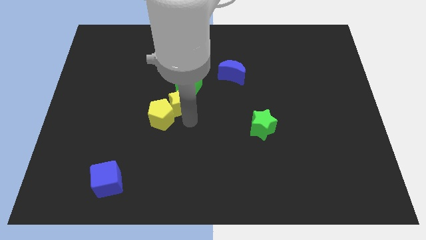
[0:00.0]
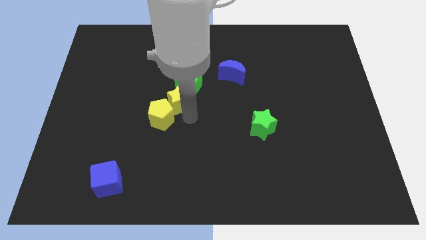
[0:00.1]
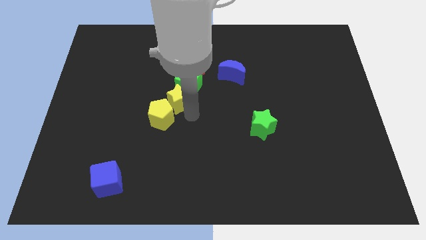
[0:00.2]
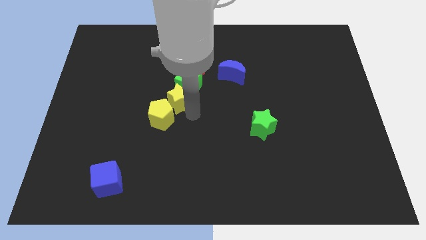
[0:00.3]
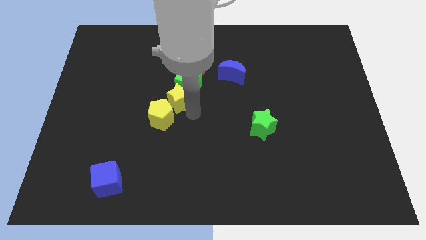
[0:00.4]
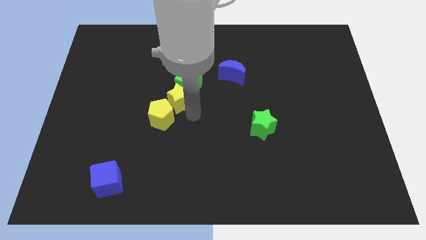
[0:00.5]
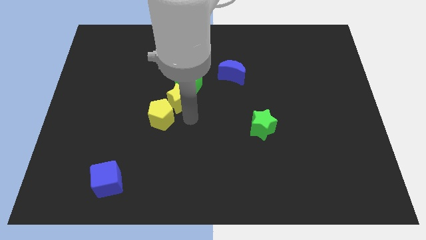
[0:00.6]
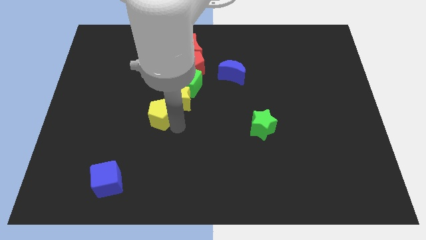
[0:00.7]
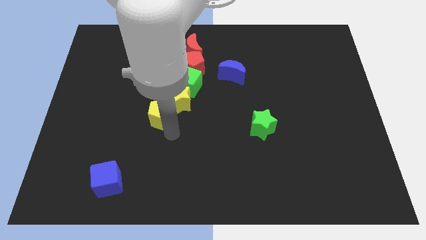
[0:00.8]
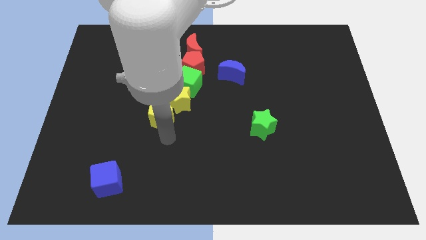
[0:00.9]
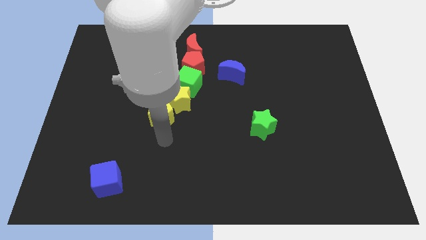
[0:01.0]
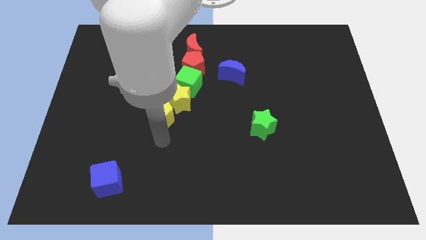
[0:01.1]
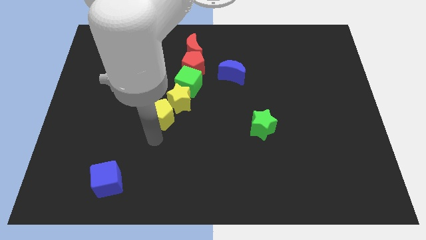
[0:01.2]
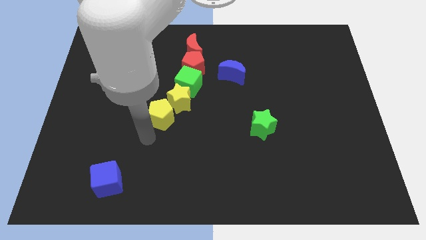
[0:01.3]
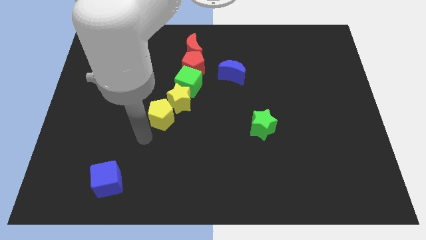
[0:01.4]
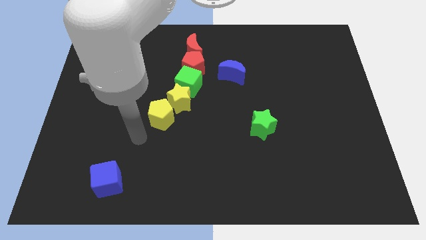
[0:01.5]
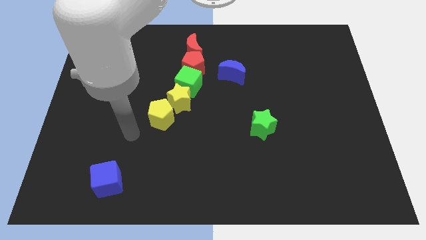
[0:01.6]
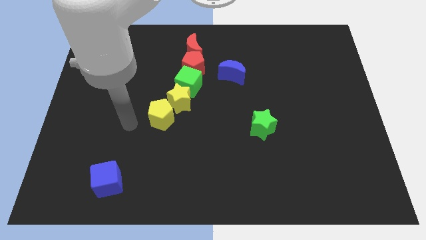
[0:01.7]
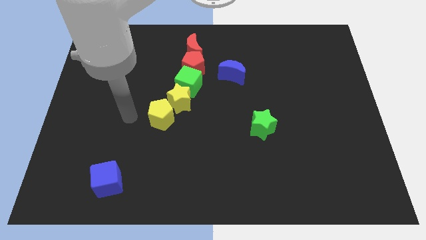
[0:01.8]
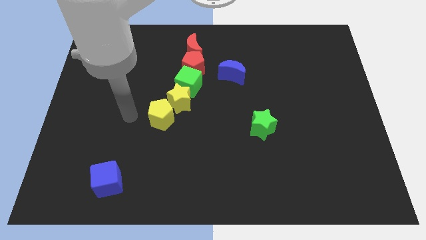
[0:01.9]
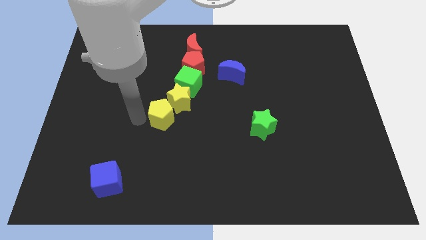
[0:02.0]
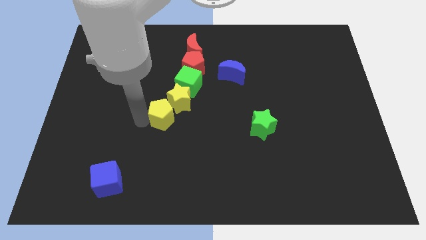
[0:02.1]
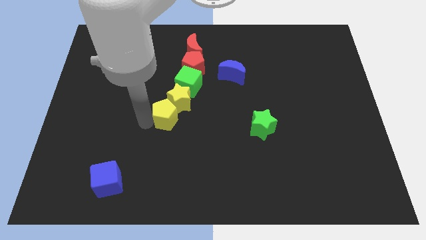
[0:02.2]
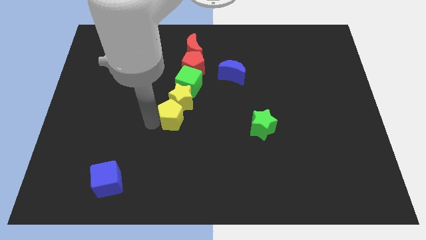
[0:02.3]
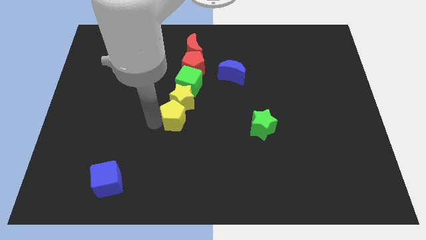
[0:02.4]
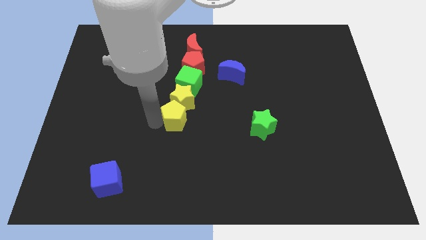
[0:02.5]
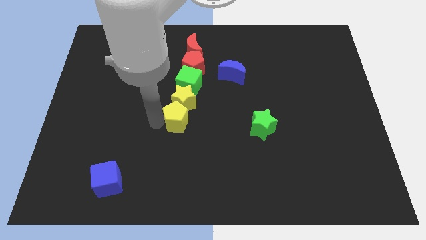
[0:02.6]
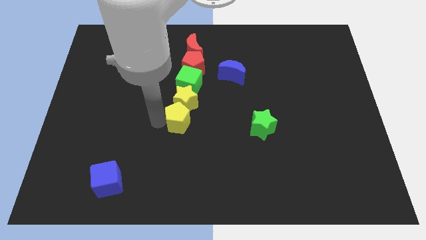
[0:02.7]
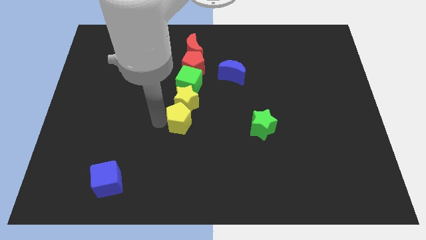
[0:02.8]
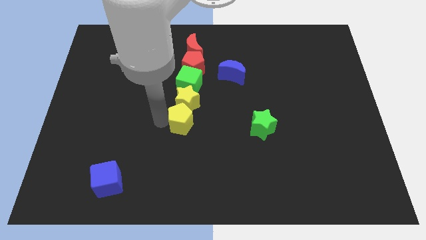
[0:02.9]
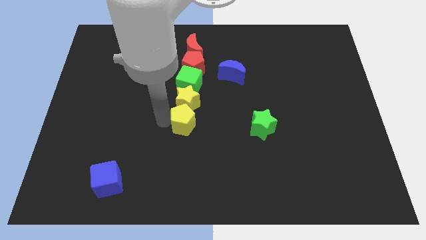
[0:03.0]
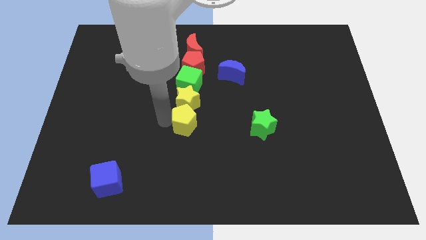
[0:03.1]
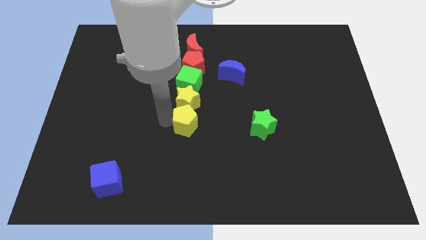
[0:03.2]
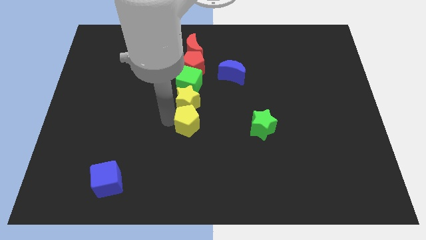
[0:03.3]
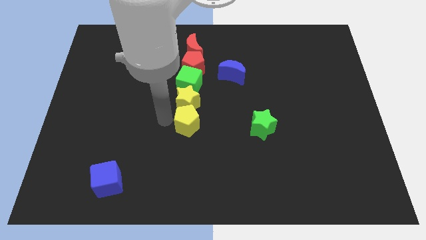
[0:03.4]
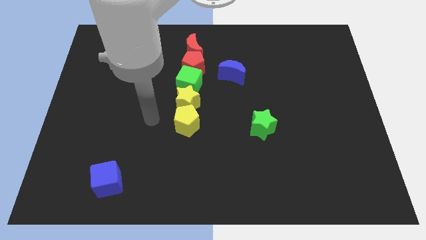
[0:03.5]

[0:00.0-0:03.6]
move the yellow pentagon down to the yellow star

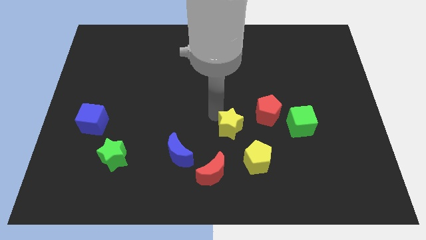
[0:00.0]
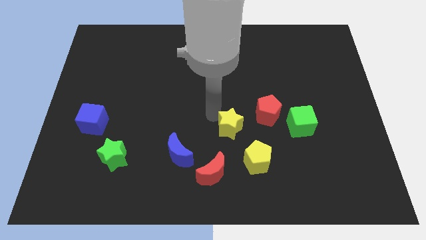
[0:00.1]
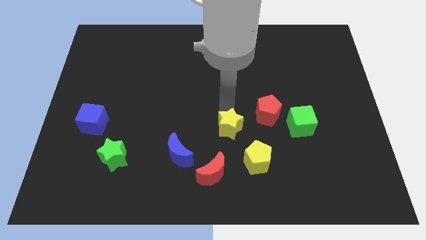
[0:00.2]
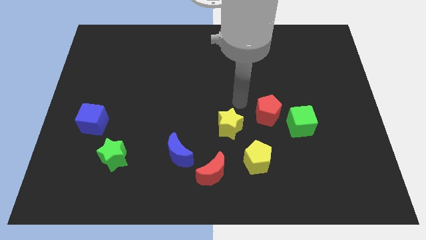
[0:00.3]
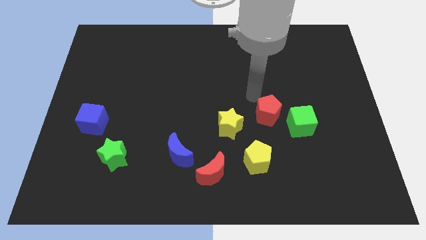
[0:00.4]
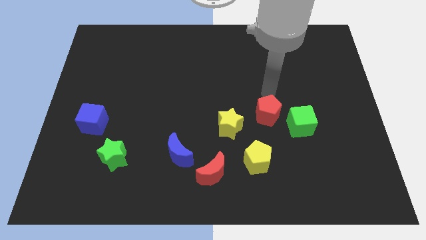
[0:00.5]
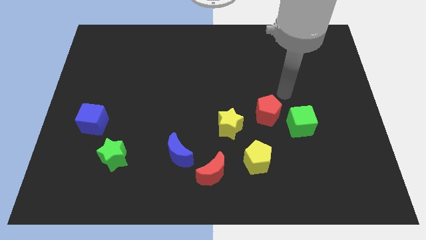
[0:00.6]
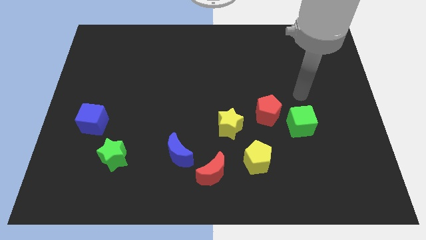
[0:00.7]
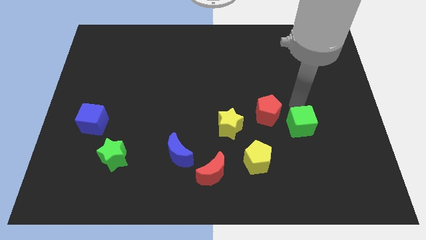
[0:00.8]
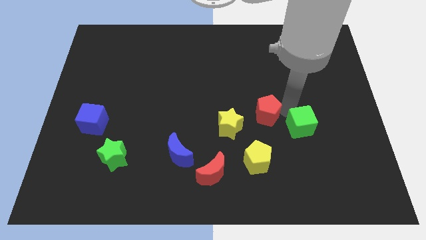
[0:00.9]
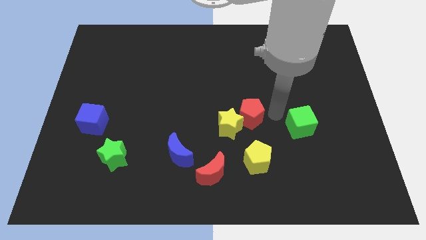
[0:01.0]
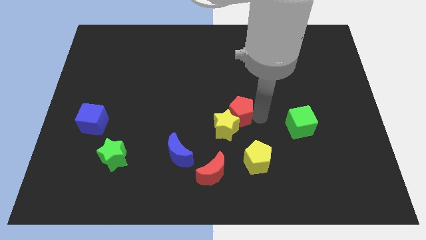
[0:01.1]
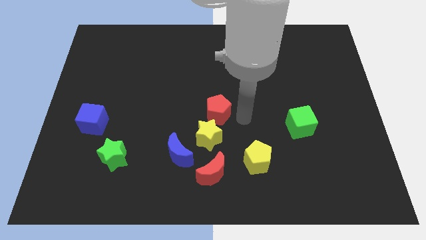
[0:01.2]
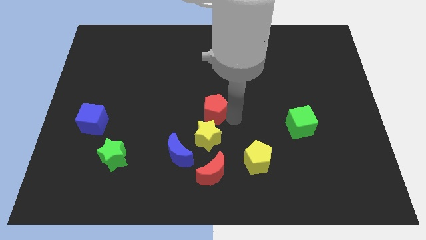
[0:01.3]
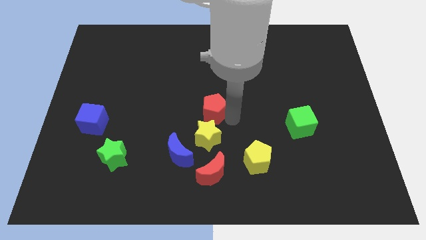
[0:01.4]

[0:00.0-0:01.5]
push the red pentagone towards the center of the board

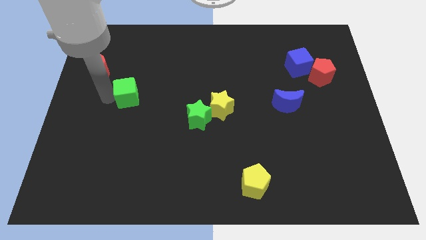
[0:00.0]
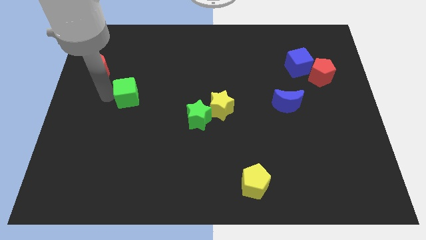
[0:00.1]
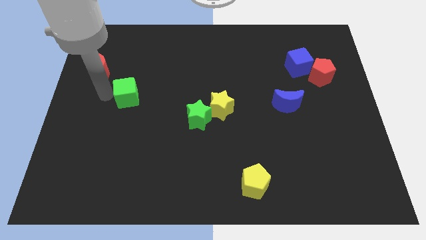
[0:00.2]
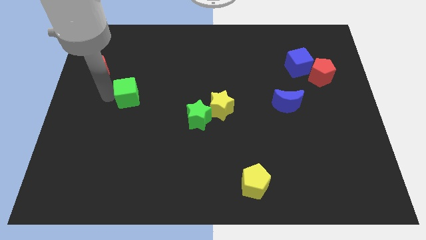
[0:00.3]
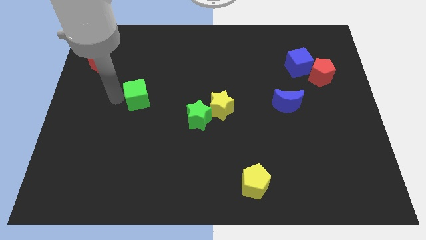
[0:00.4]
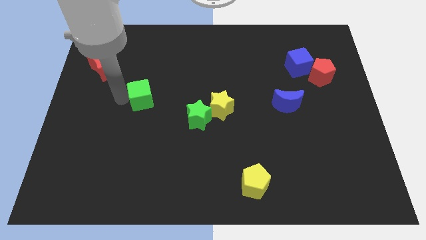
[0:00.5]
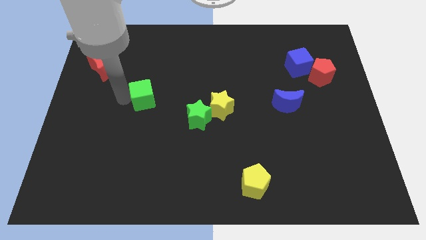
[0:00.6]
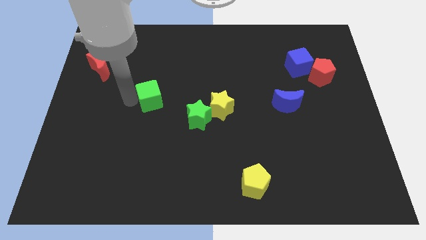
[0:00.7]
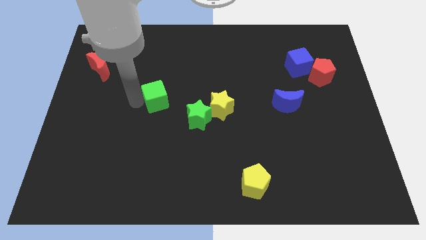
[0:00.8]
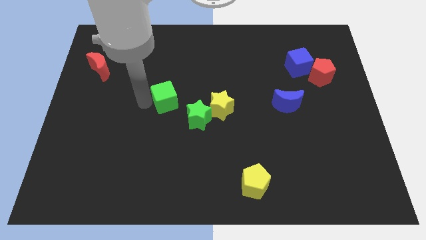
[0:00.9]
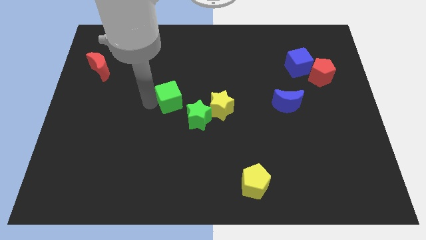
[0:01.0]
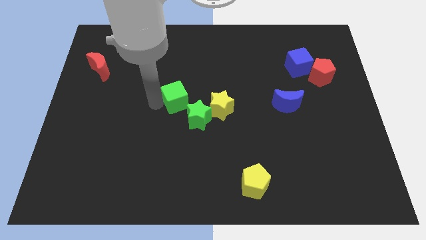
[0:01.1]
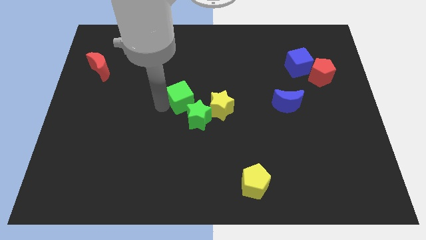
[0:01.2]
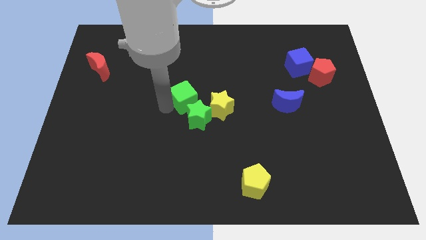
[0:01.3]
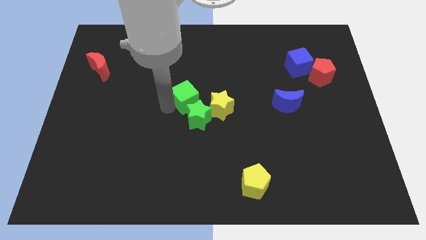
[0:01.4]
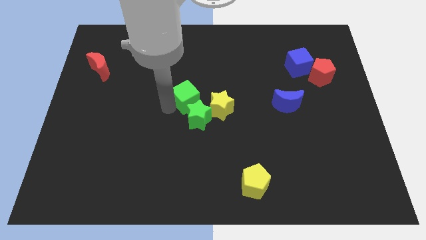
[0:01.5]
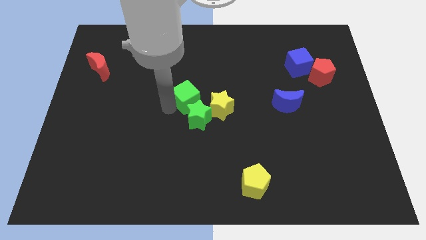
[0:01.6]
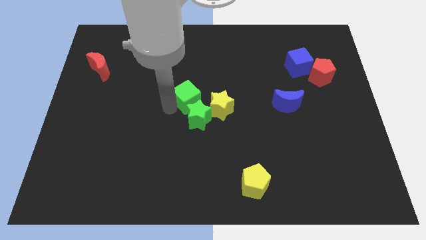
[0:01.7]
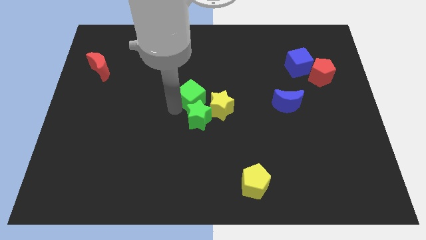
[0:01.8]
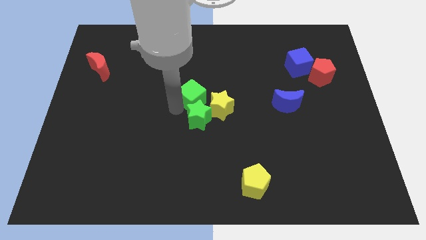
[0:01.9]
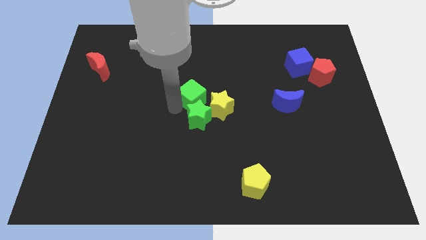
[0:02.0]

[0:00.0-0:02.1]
place green cube to the top of green star

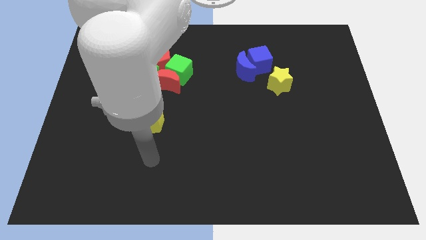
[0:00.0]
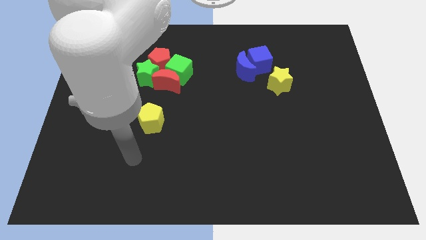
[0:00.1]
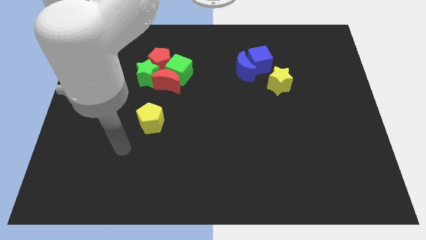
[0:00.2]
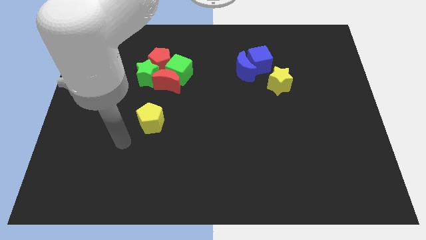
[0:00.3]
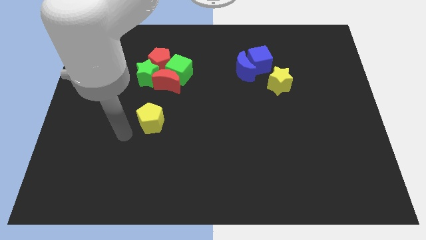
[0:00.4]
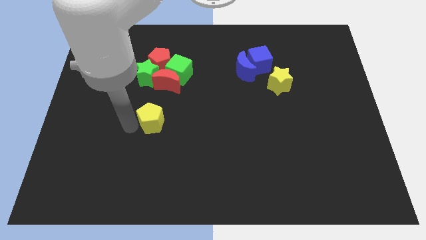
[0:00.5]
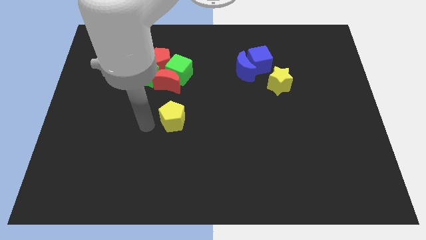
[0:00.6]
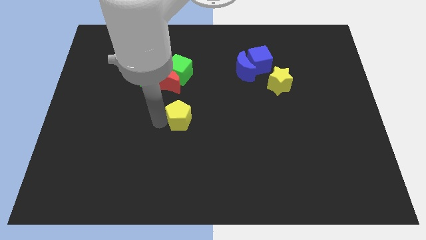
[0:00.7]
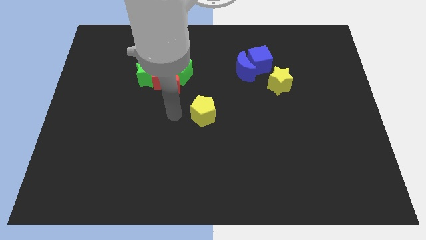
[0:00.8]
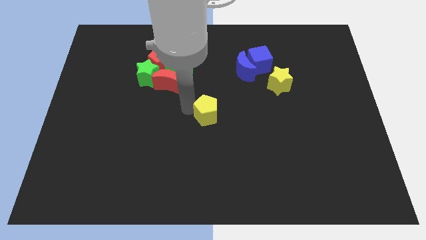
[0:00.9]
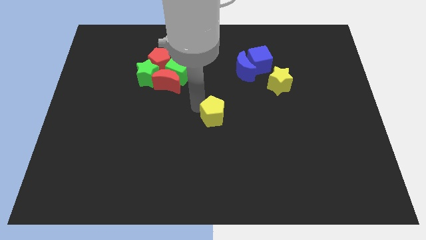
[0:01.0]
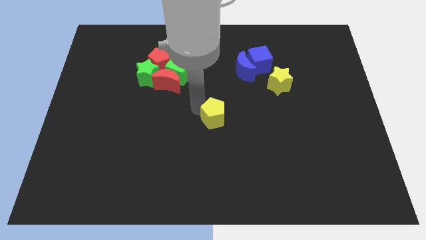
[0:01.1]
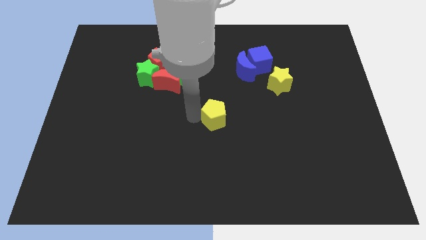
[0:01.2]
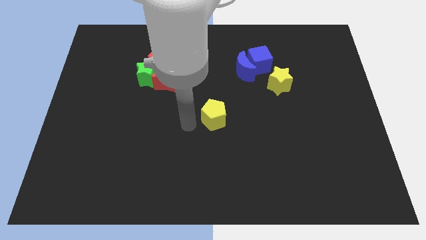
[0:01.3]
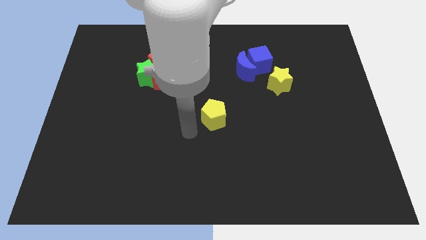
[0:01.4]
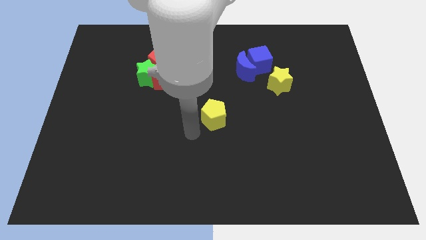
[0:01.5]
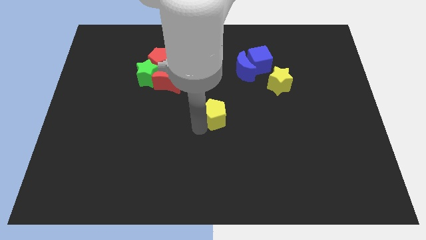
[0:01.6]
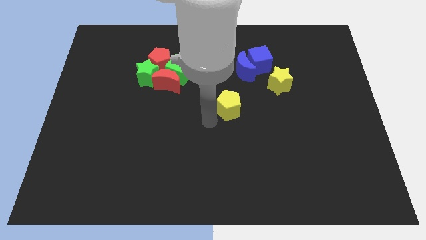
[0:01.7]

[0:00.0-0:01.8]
move the yellow pentagon towards the yellow star
